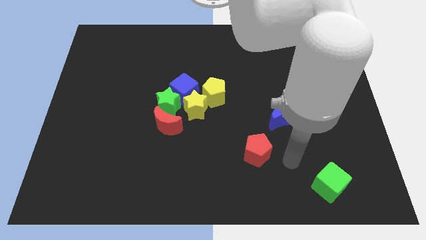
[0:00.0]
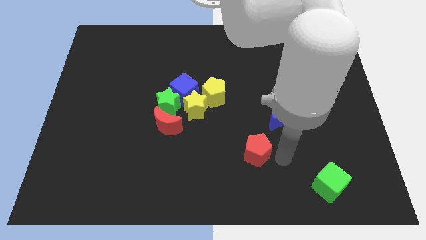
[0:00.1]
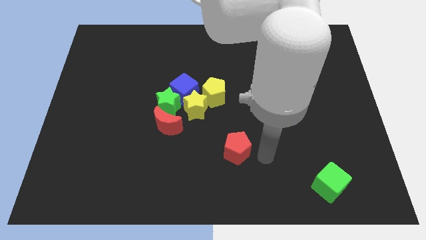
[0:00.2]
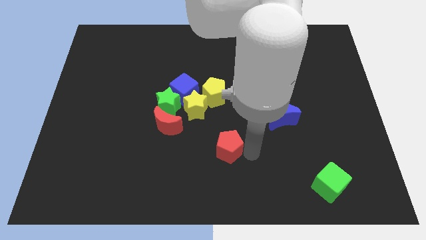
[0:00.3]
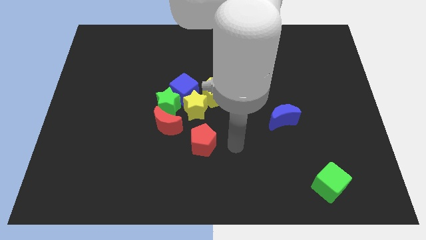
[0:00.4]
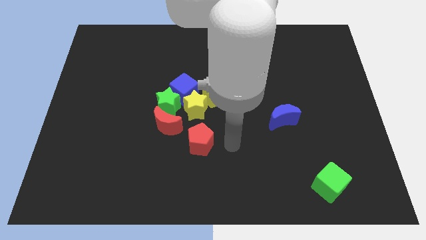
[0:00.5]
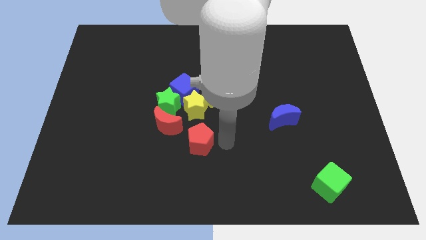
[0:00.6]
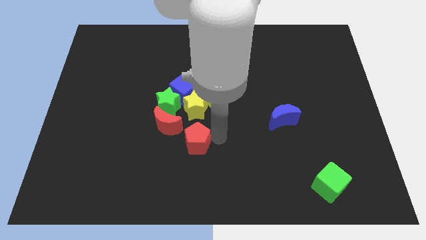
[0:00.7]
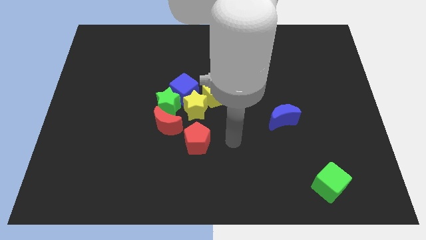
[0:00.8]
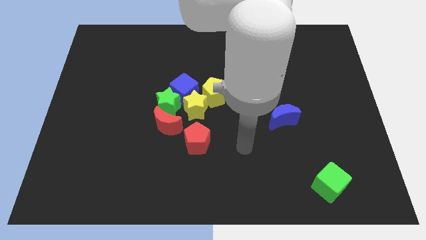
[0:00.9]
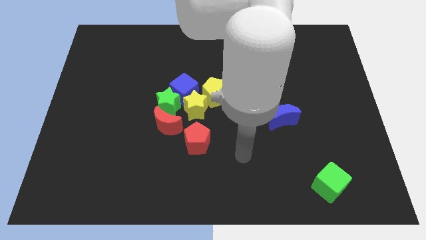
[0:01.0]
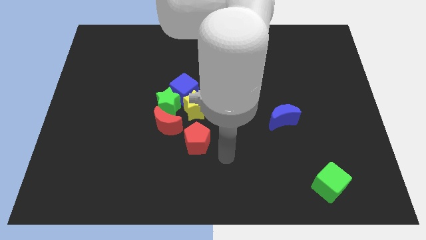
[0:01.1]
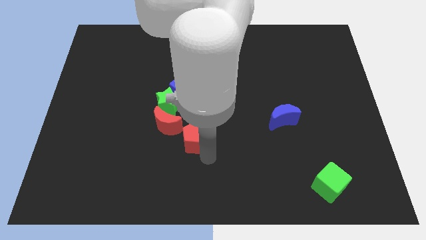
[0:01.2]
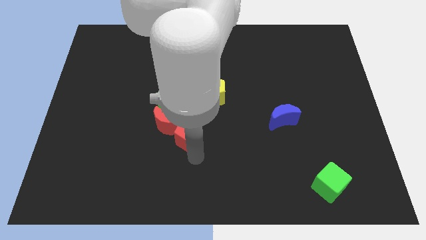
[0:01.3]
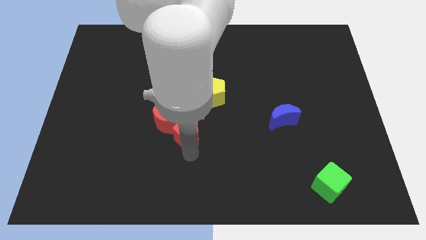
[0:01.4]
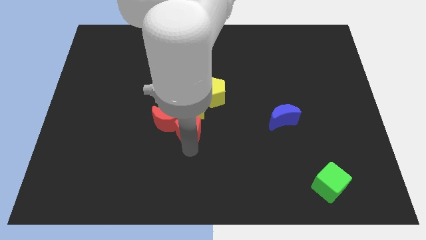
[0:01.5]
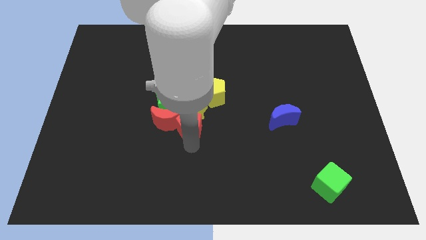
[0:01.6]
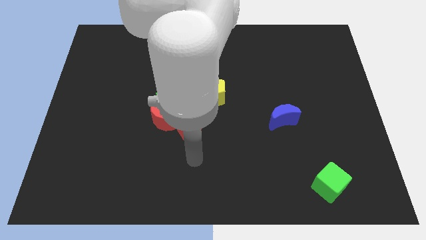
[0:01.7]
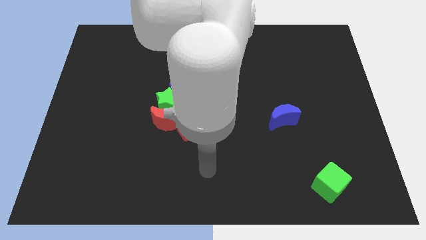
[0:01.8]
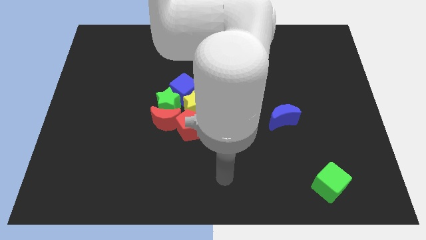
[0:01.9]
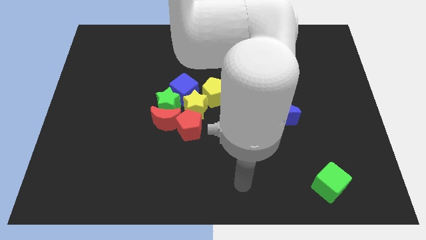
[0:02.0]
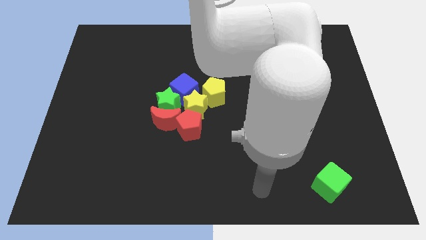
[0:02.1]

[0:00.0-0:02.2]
push red pentagon into group of blocks

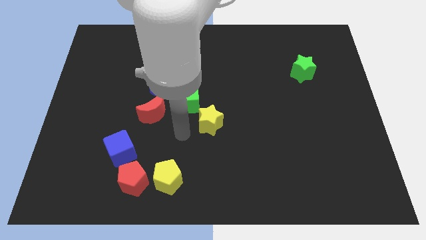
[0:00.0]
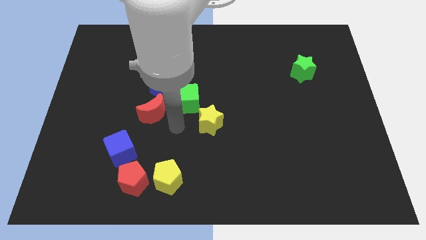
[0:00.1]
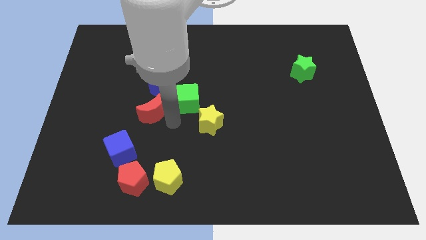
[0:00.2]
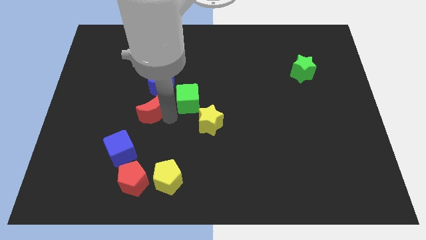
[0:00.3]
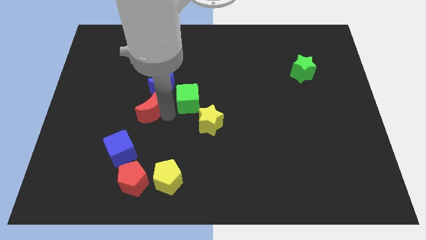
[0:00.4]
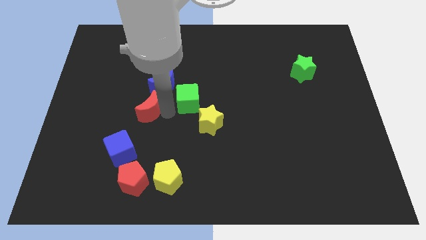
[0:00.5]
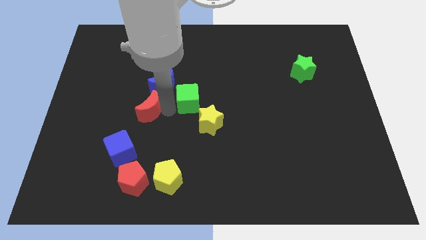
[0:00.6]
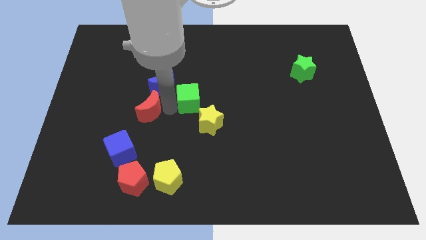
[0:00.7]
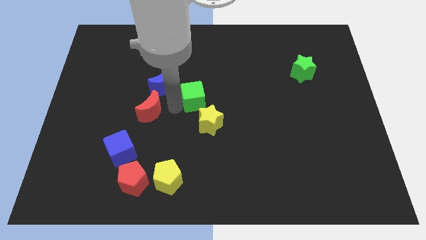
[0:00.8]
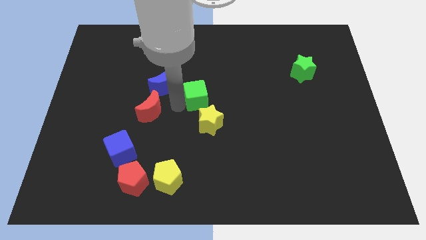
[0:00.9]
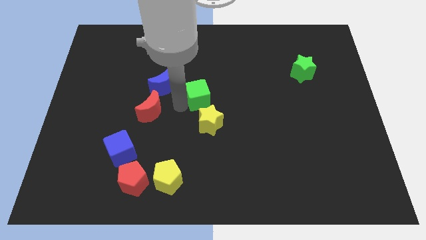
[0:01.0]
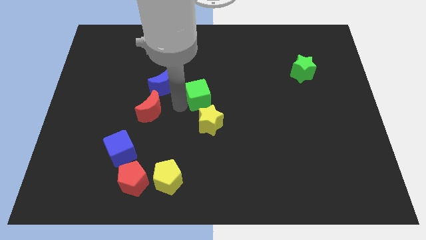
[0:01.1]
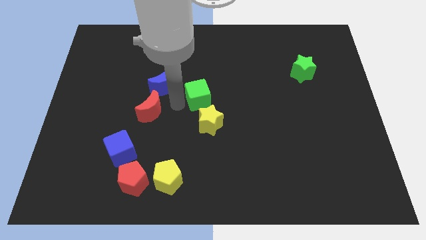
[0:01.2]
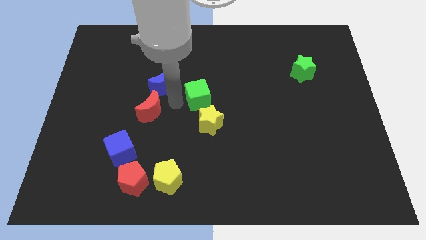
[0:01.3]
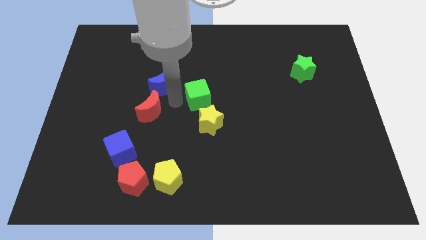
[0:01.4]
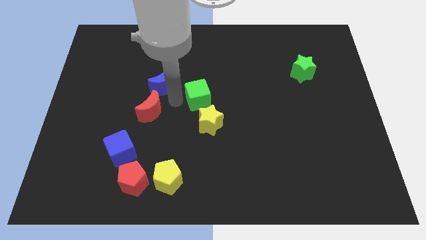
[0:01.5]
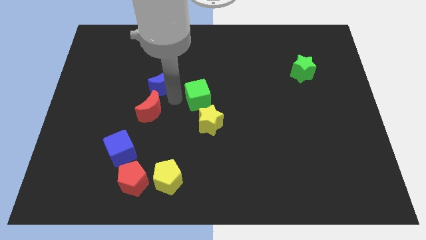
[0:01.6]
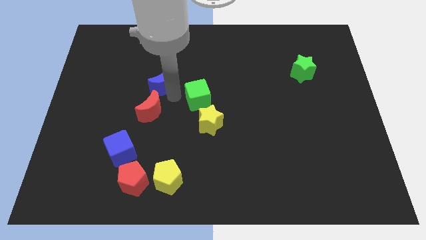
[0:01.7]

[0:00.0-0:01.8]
push green cube at the top of yellow star

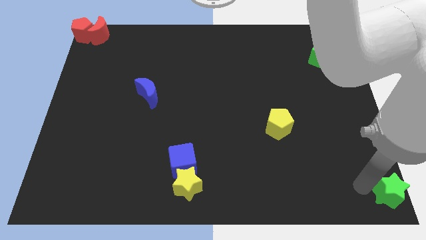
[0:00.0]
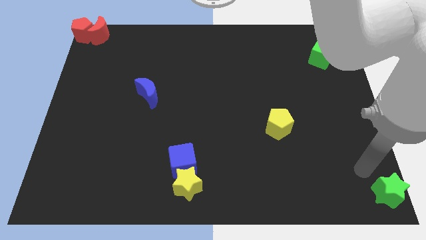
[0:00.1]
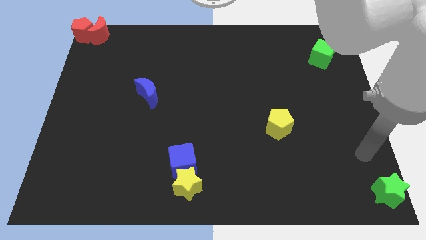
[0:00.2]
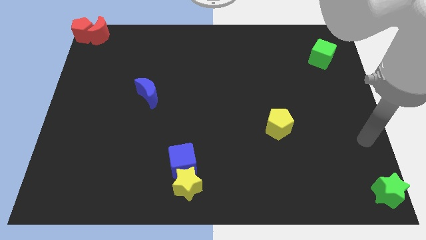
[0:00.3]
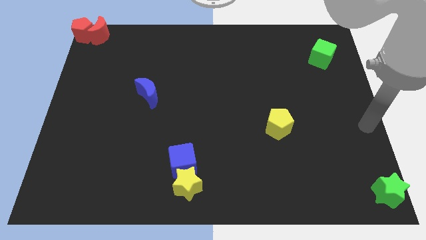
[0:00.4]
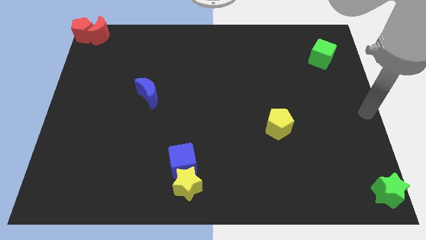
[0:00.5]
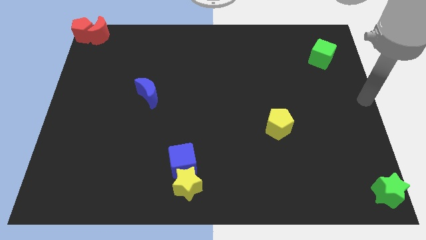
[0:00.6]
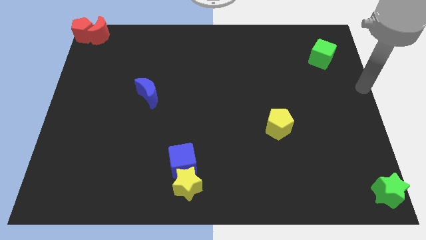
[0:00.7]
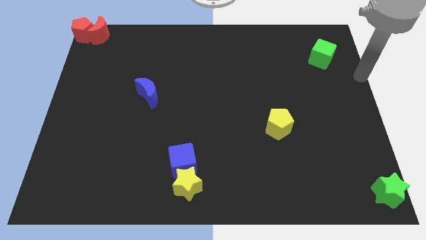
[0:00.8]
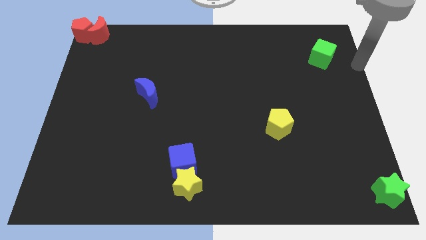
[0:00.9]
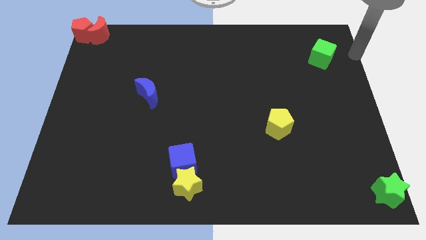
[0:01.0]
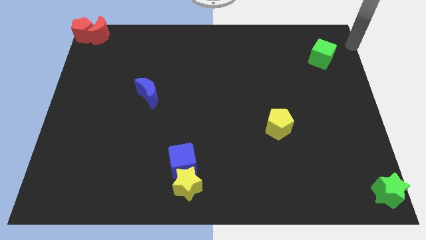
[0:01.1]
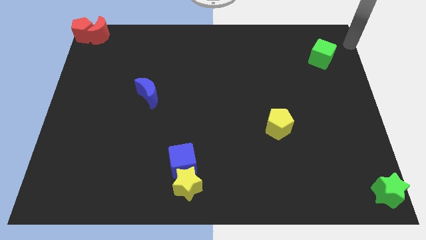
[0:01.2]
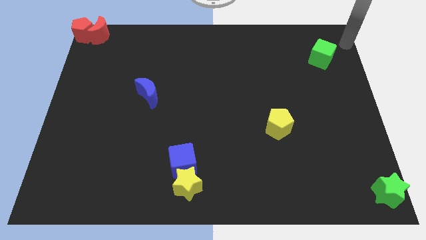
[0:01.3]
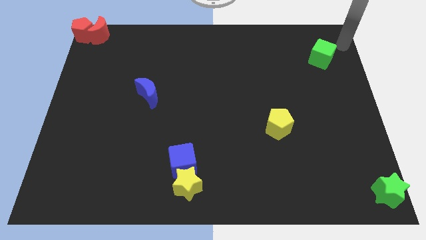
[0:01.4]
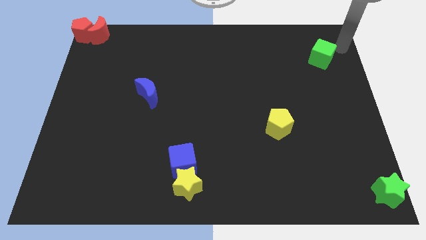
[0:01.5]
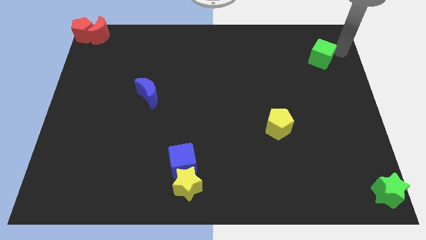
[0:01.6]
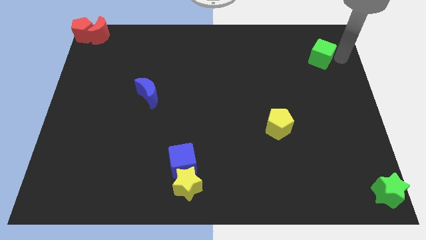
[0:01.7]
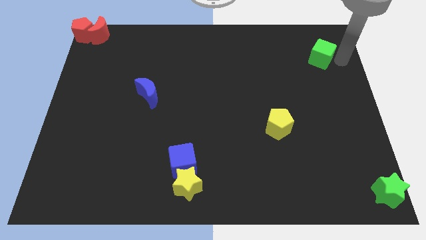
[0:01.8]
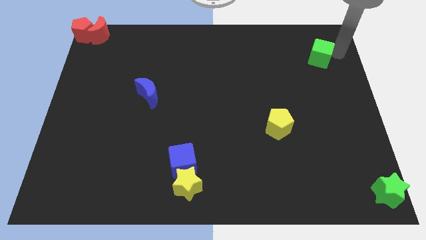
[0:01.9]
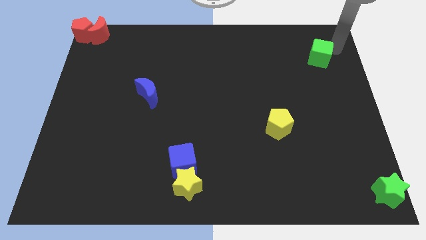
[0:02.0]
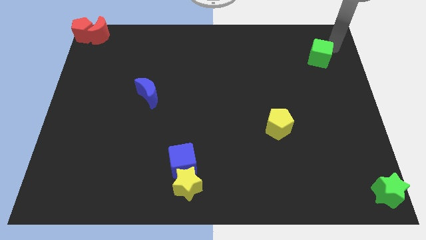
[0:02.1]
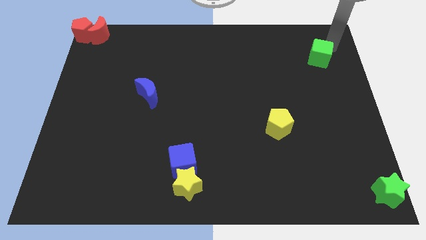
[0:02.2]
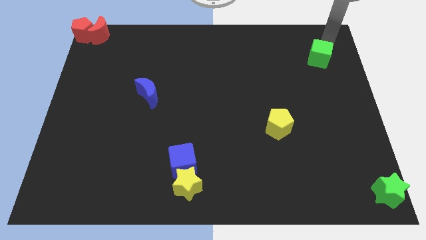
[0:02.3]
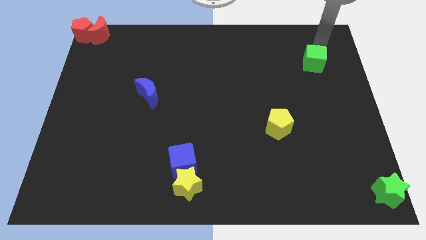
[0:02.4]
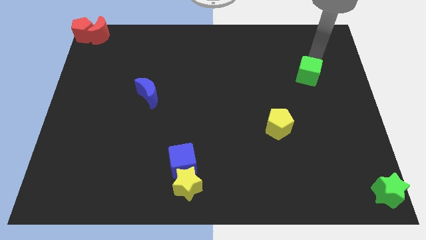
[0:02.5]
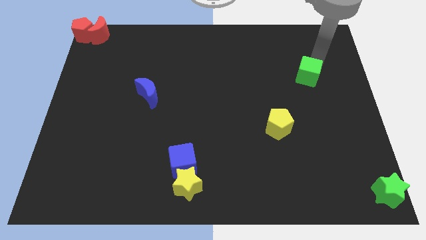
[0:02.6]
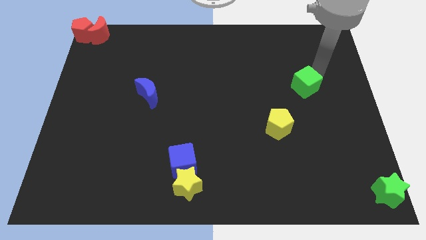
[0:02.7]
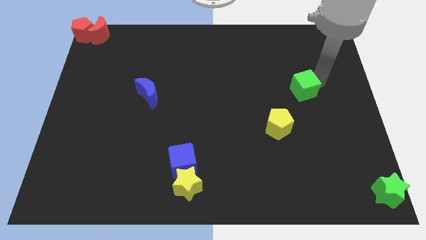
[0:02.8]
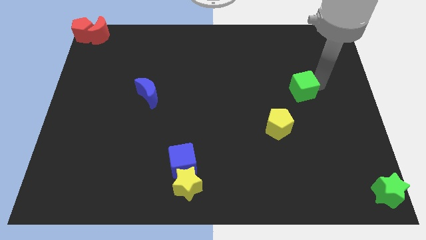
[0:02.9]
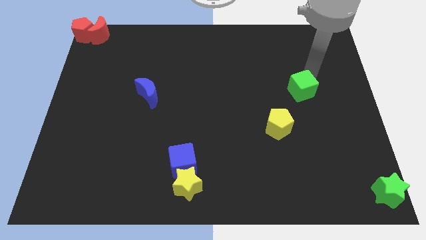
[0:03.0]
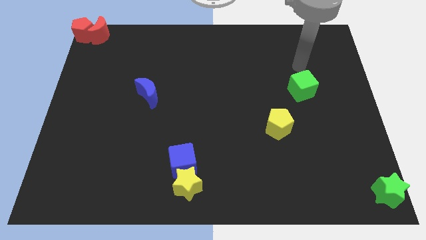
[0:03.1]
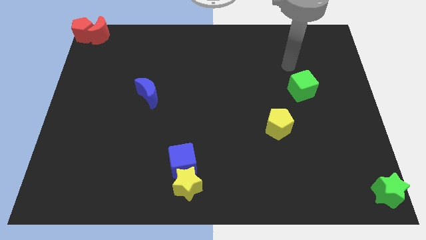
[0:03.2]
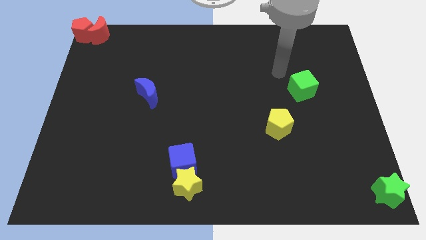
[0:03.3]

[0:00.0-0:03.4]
push the green cube towards the yellow pentagon

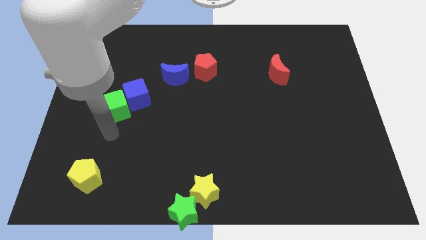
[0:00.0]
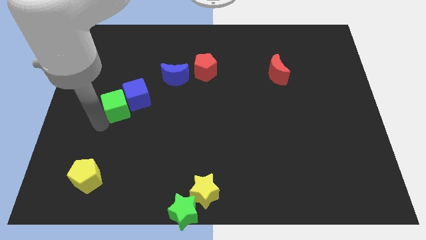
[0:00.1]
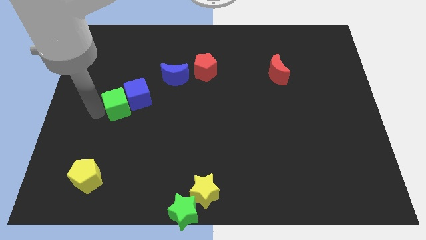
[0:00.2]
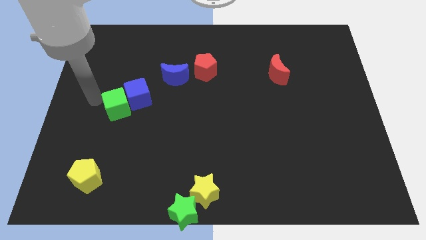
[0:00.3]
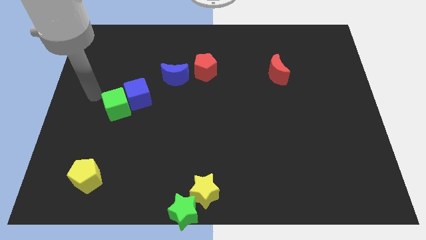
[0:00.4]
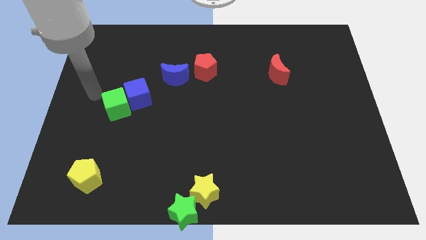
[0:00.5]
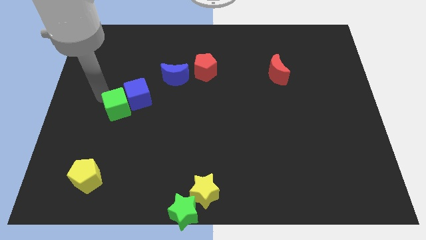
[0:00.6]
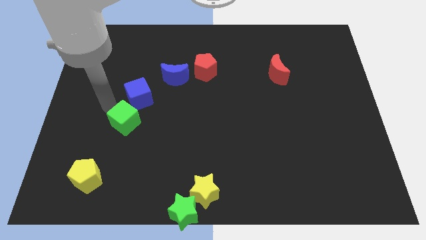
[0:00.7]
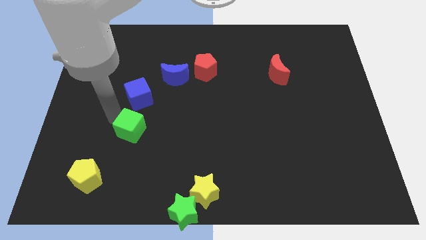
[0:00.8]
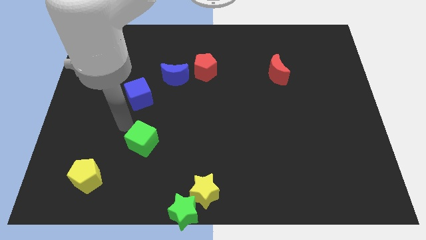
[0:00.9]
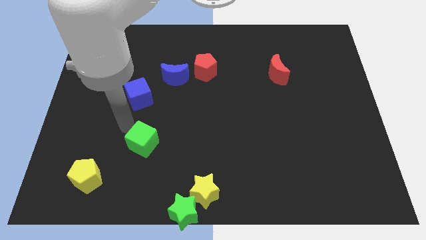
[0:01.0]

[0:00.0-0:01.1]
separate the green cube from the blue cube

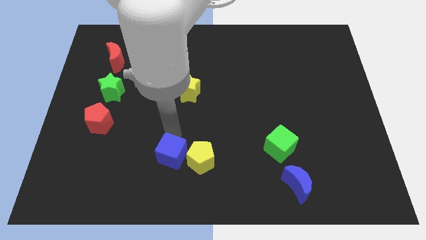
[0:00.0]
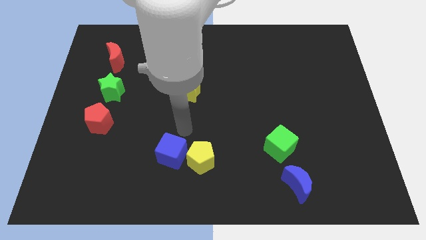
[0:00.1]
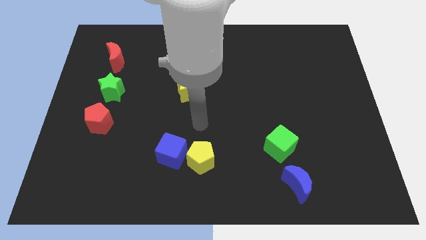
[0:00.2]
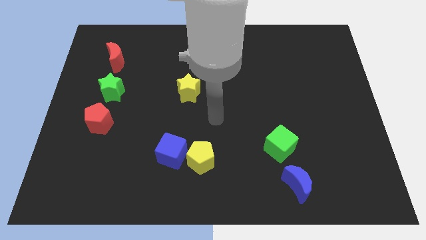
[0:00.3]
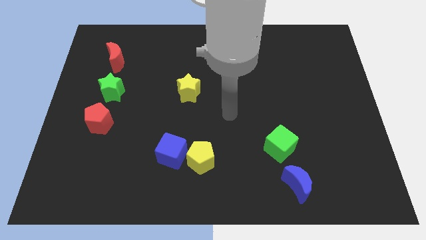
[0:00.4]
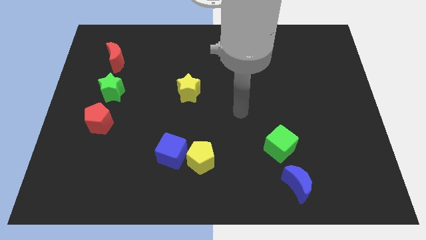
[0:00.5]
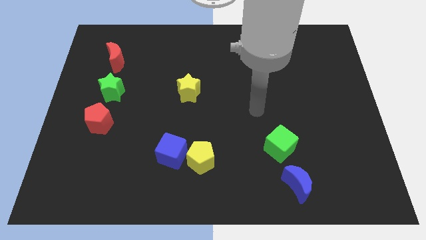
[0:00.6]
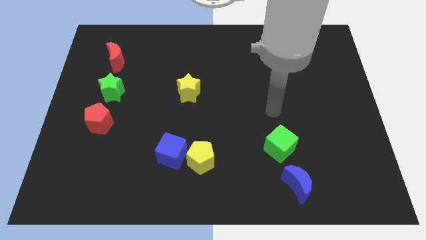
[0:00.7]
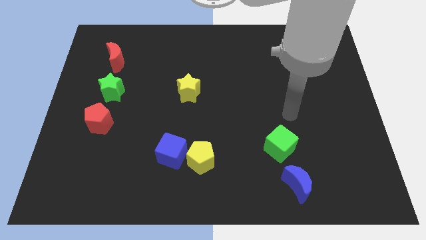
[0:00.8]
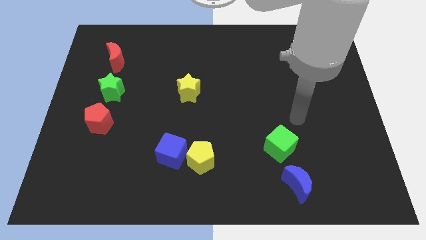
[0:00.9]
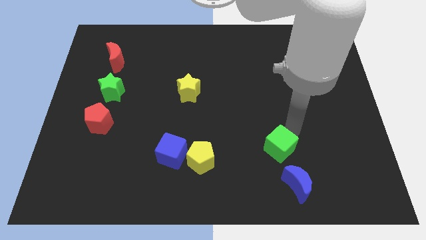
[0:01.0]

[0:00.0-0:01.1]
move your arm towards the green cube
